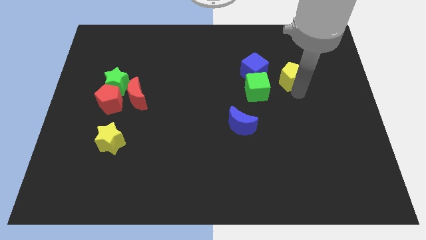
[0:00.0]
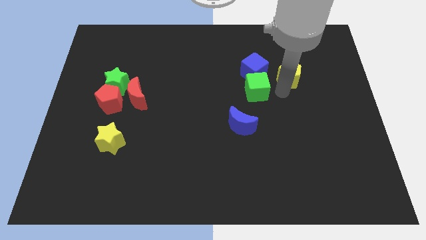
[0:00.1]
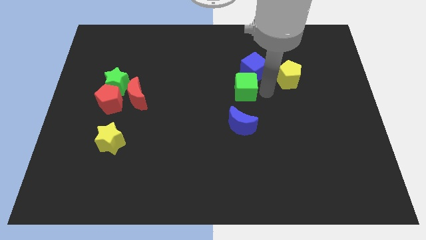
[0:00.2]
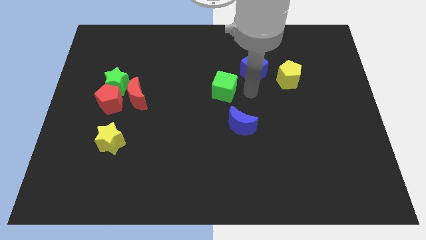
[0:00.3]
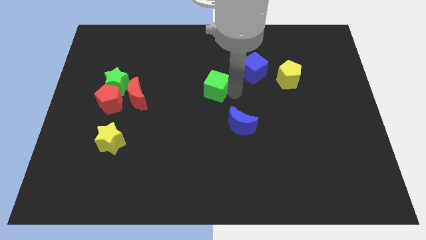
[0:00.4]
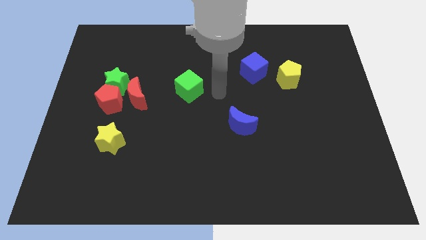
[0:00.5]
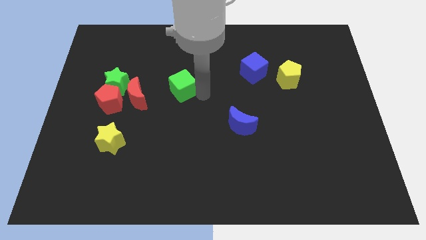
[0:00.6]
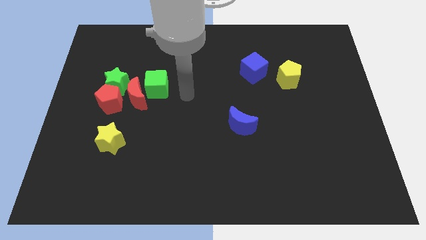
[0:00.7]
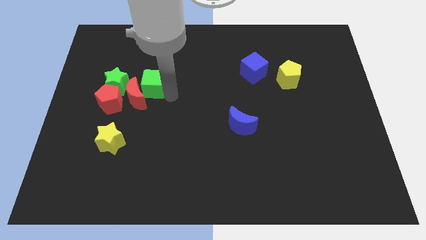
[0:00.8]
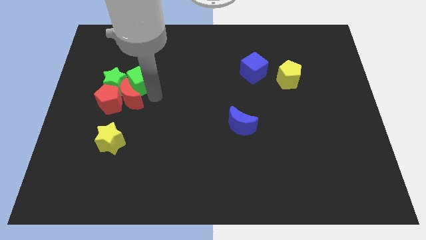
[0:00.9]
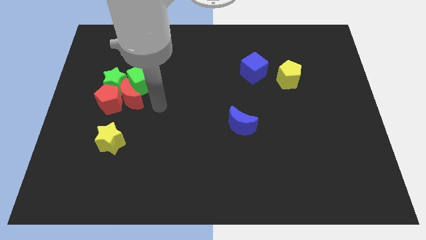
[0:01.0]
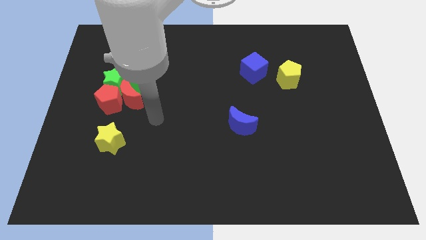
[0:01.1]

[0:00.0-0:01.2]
add the green cube to the group of blocks

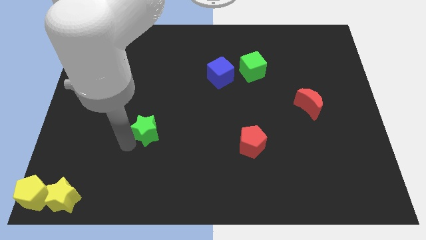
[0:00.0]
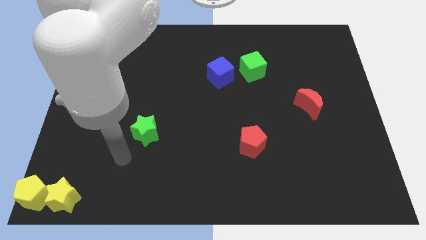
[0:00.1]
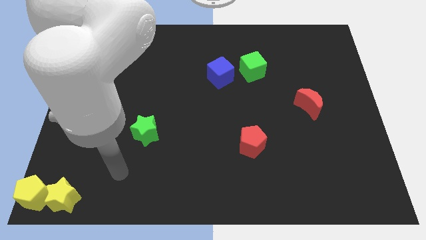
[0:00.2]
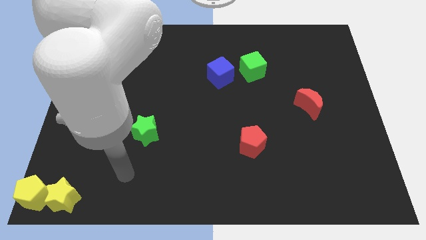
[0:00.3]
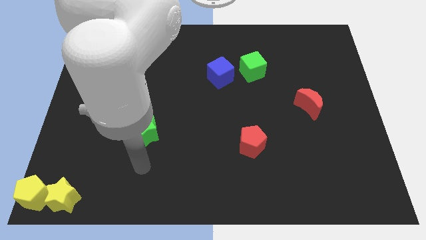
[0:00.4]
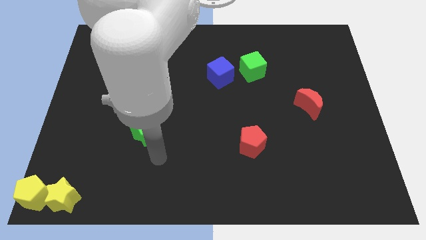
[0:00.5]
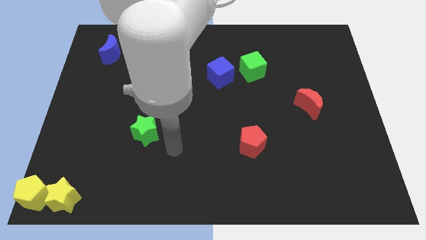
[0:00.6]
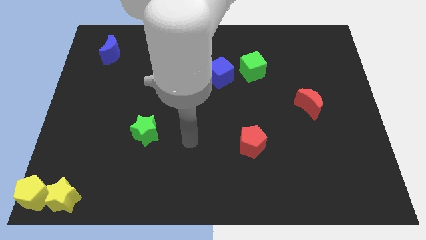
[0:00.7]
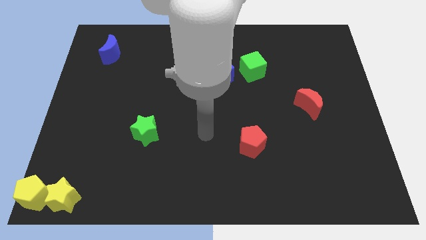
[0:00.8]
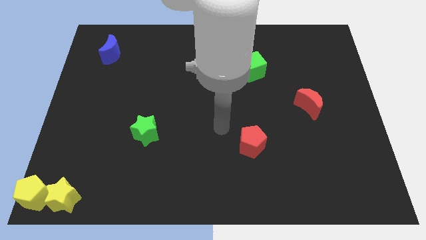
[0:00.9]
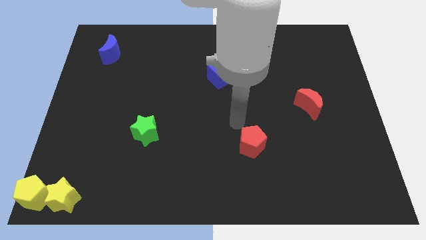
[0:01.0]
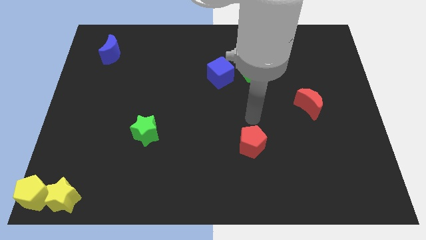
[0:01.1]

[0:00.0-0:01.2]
point your arm at the top of the red pentagon

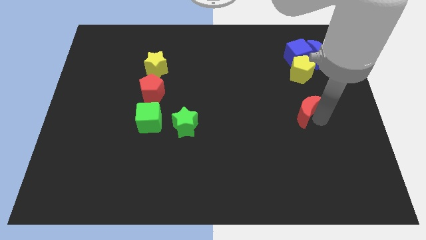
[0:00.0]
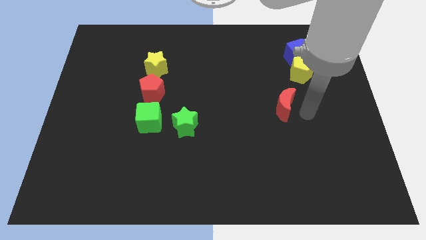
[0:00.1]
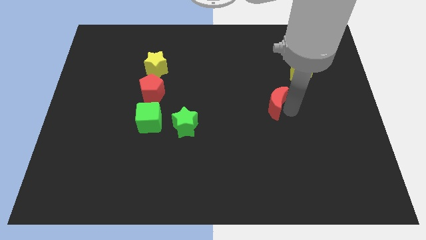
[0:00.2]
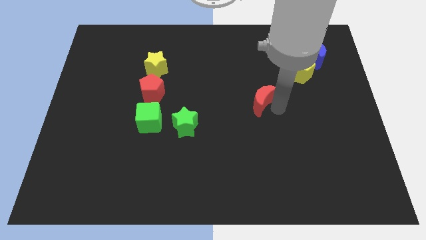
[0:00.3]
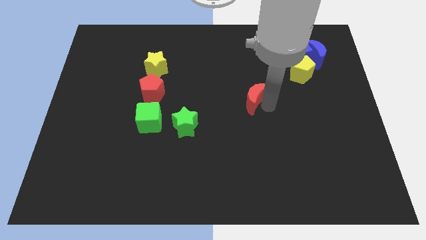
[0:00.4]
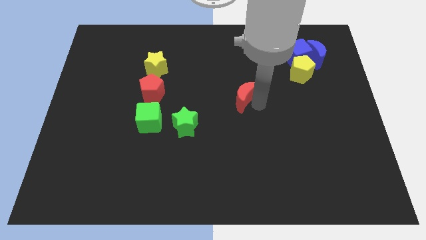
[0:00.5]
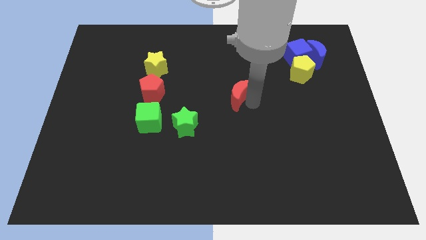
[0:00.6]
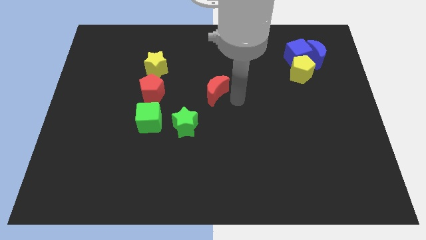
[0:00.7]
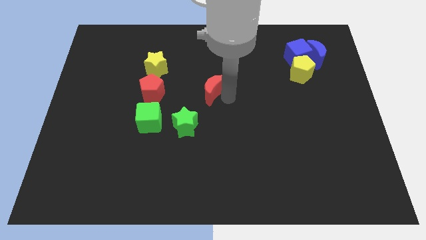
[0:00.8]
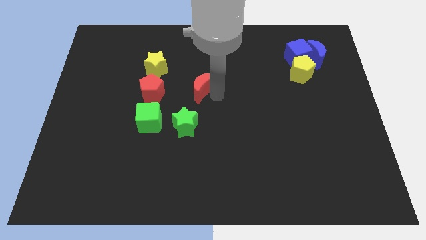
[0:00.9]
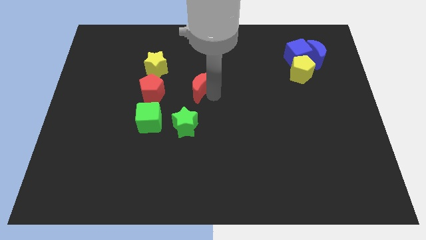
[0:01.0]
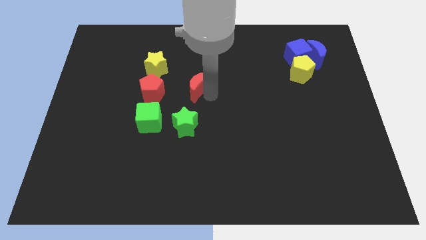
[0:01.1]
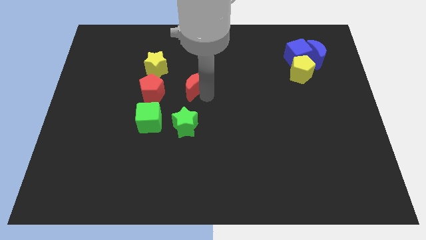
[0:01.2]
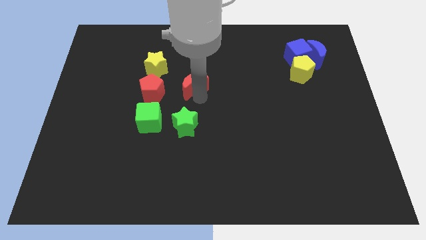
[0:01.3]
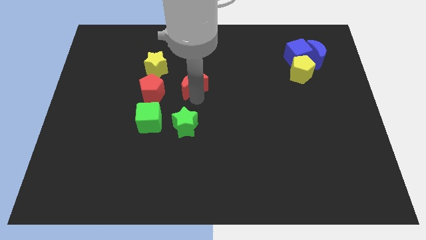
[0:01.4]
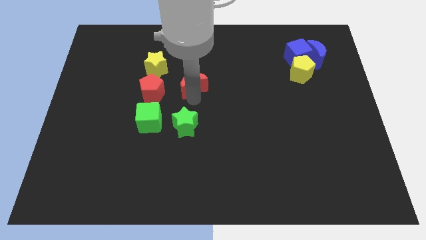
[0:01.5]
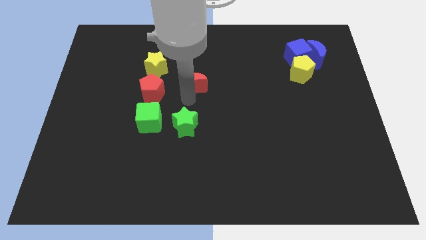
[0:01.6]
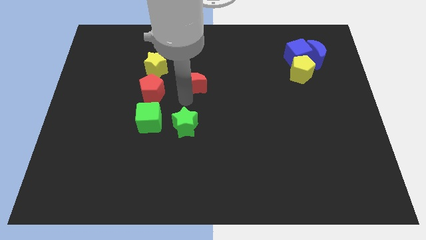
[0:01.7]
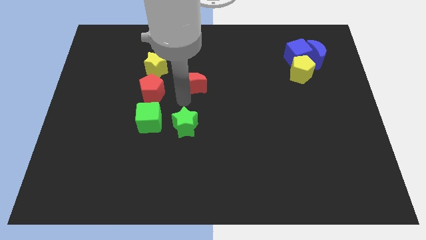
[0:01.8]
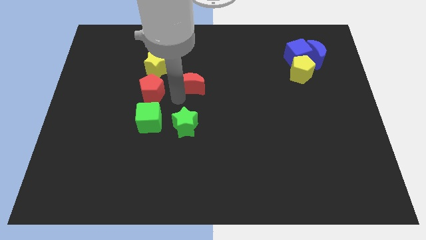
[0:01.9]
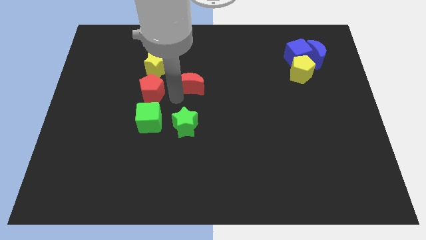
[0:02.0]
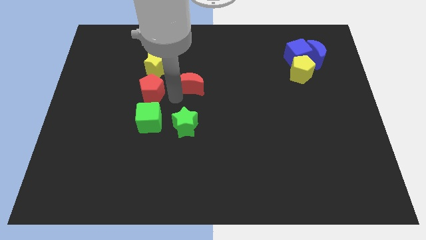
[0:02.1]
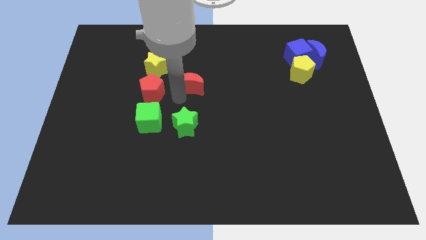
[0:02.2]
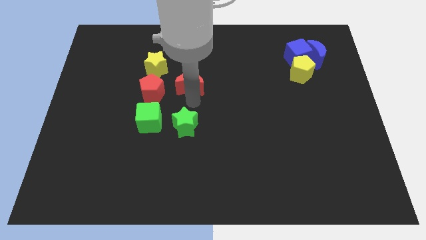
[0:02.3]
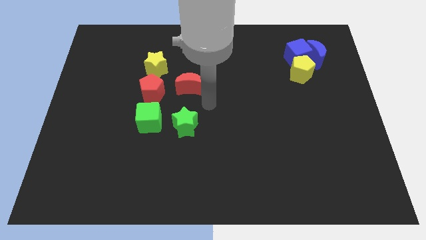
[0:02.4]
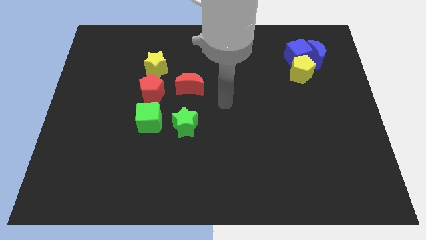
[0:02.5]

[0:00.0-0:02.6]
move the red crescent to the right of the red pentagon

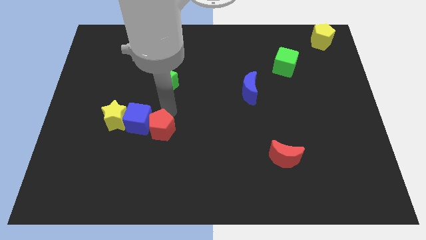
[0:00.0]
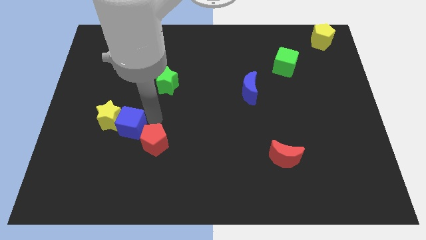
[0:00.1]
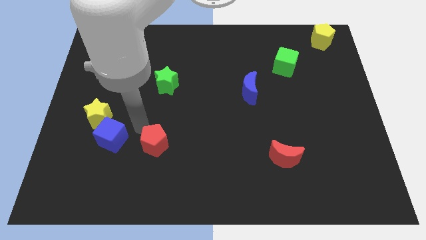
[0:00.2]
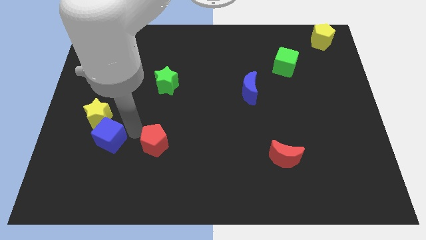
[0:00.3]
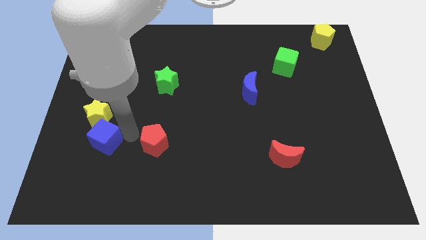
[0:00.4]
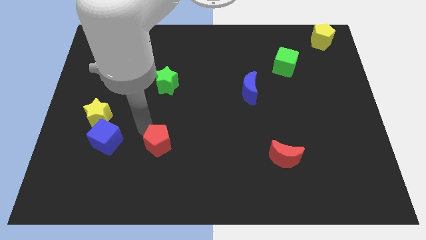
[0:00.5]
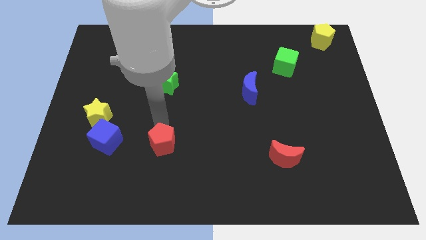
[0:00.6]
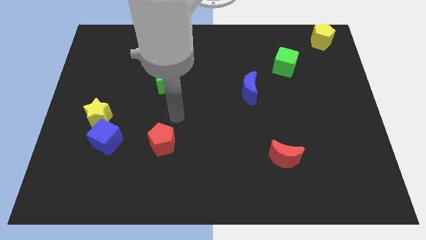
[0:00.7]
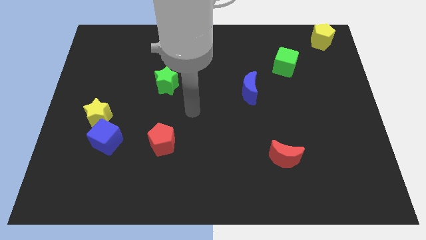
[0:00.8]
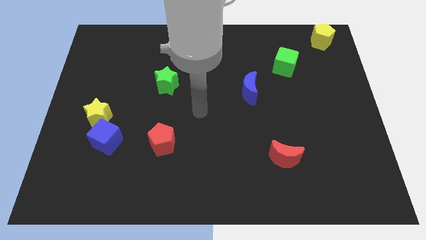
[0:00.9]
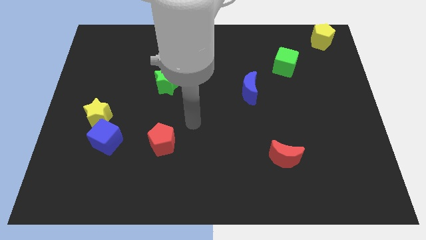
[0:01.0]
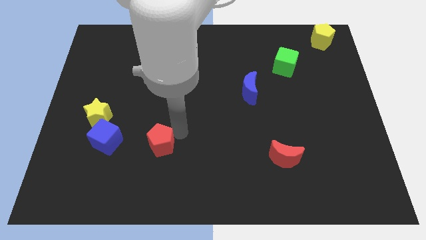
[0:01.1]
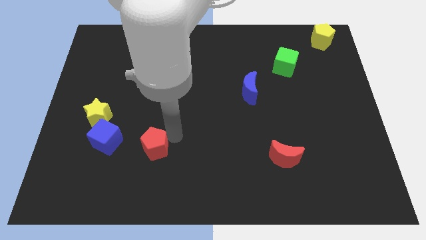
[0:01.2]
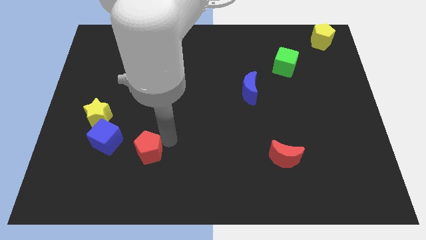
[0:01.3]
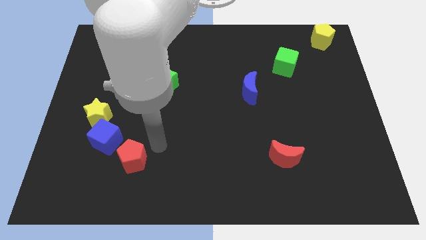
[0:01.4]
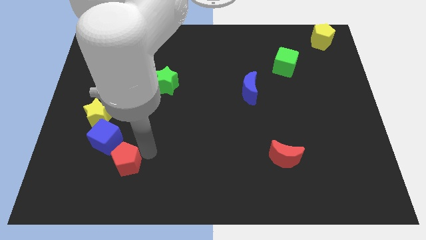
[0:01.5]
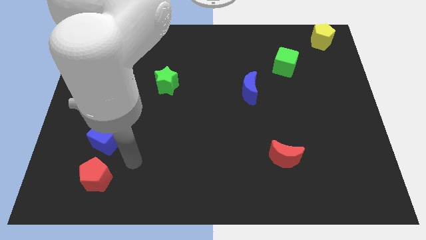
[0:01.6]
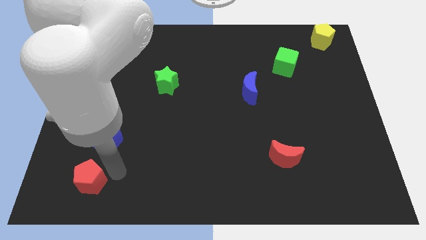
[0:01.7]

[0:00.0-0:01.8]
move the red pentagon away from the horizontal lline of blocks

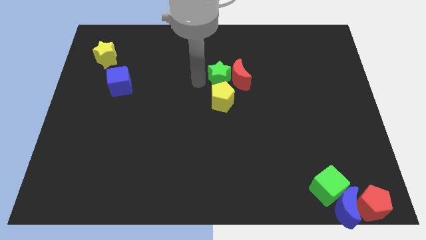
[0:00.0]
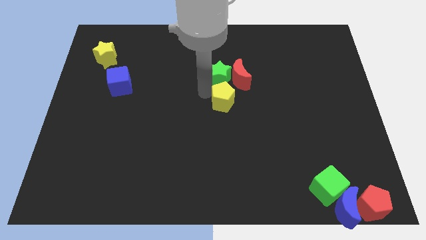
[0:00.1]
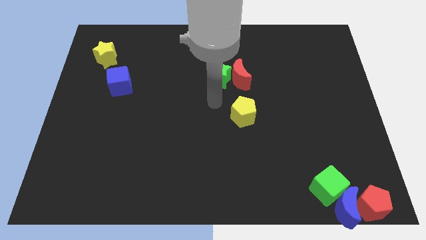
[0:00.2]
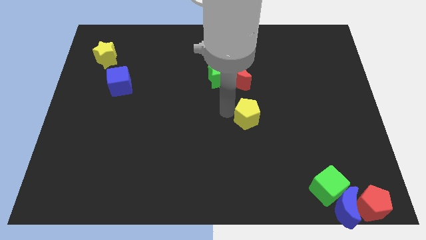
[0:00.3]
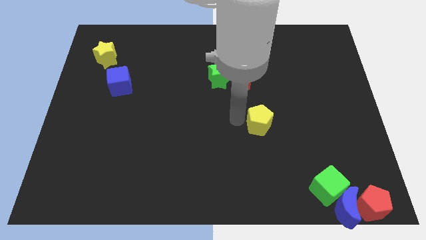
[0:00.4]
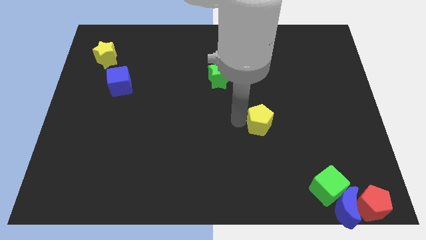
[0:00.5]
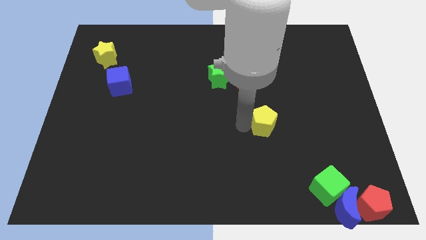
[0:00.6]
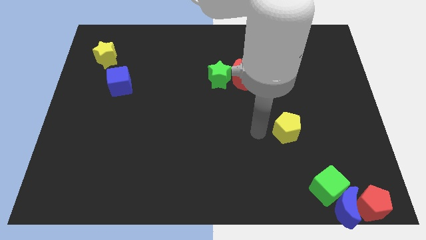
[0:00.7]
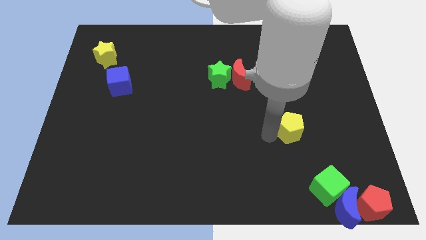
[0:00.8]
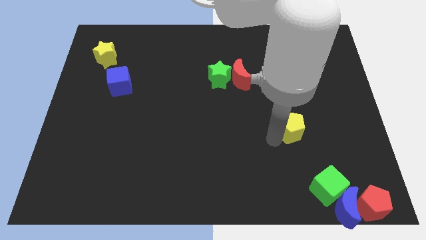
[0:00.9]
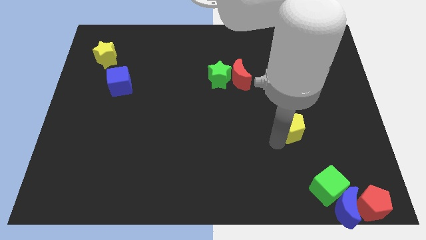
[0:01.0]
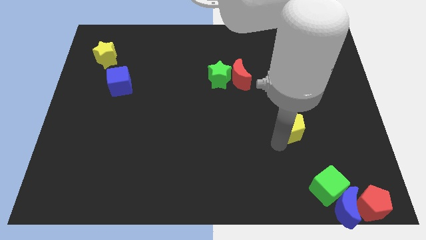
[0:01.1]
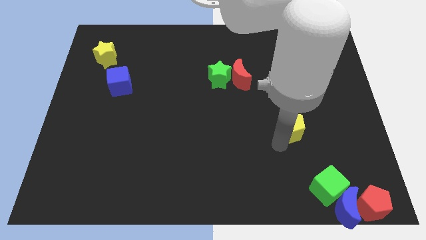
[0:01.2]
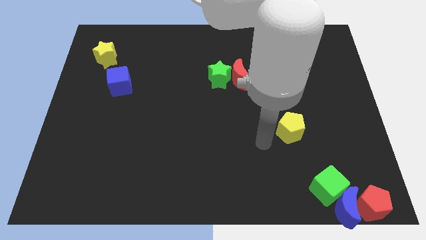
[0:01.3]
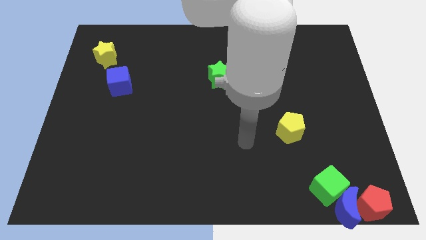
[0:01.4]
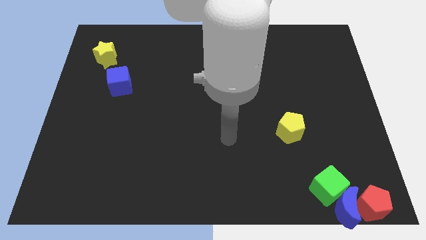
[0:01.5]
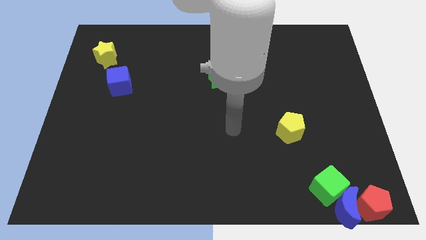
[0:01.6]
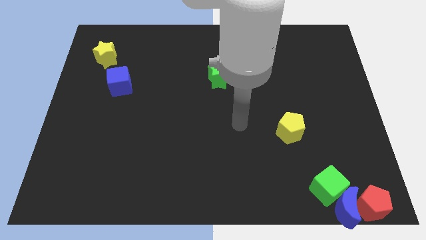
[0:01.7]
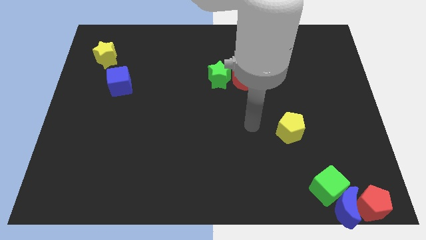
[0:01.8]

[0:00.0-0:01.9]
push the yellow pentagon towards the green cube

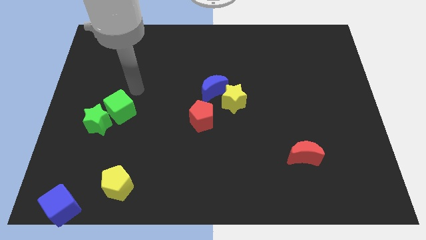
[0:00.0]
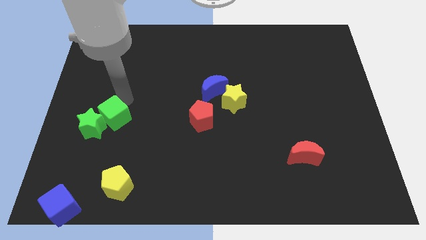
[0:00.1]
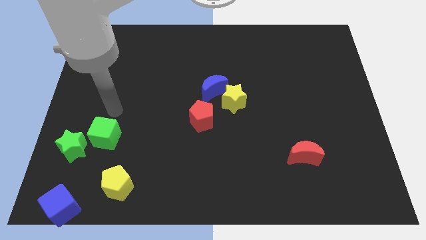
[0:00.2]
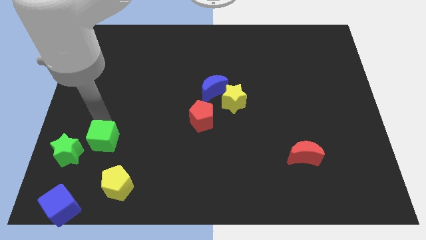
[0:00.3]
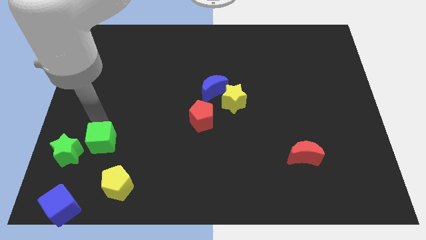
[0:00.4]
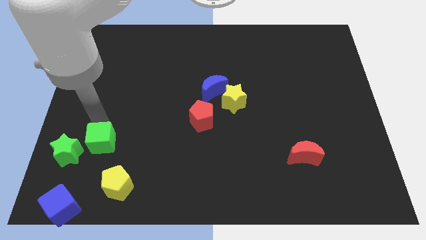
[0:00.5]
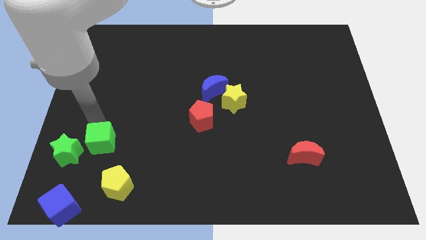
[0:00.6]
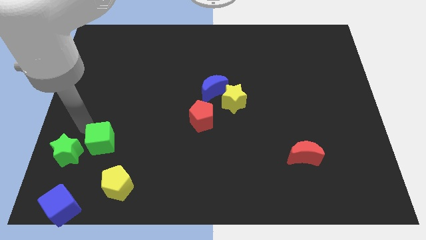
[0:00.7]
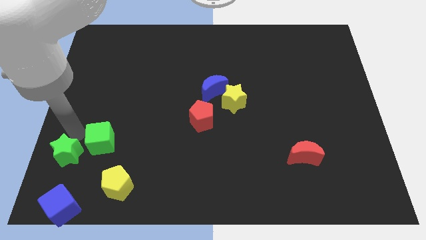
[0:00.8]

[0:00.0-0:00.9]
push the green cube and green star towards the bottom
